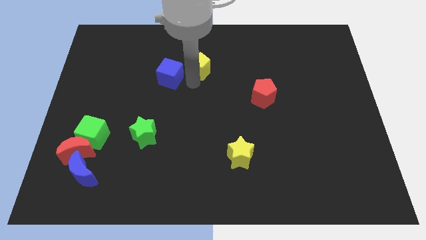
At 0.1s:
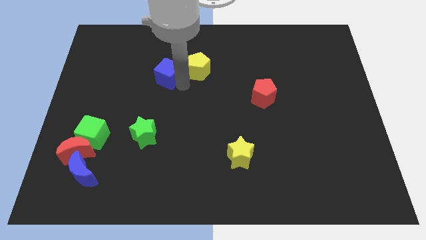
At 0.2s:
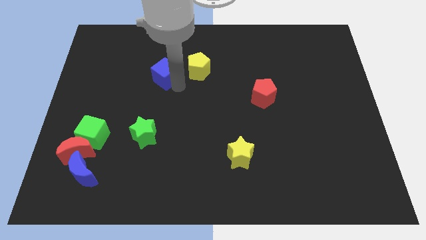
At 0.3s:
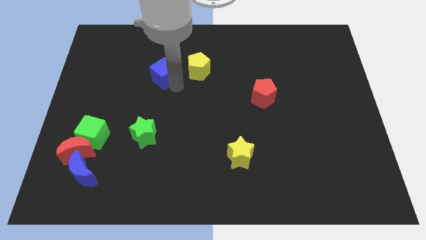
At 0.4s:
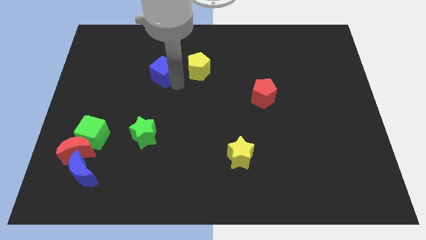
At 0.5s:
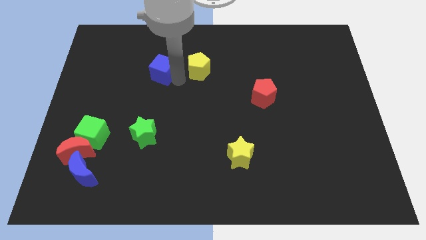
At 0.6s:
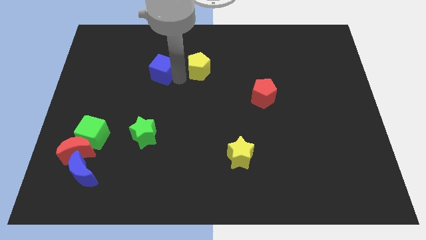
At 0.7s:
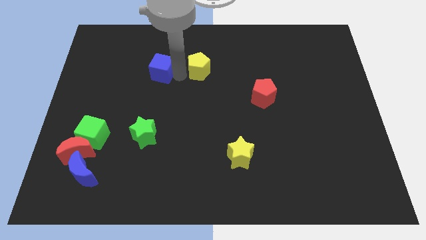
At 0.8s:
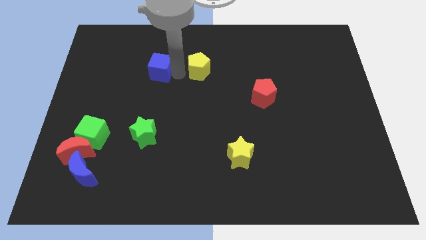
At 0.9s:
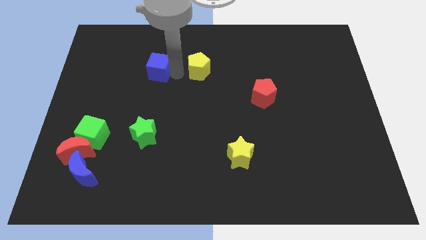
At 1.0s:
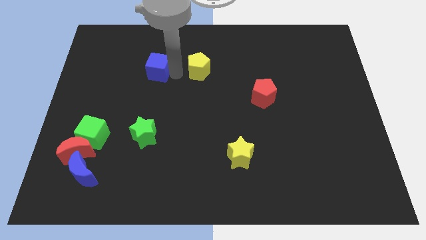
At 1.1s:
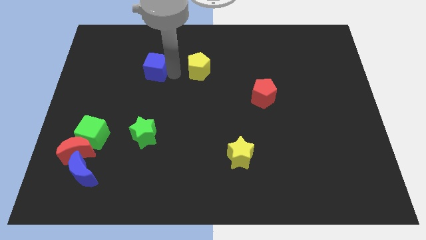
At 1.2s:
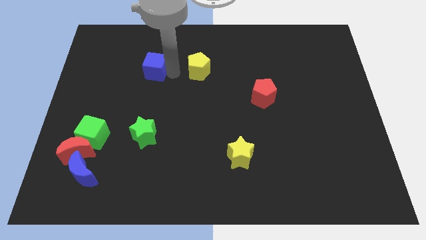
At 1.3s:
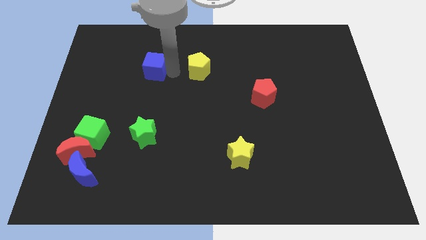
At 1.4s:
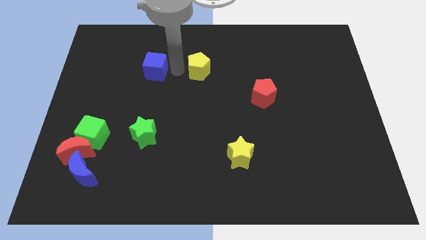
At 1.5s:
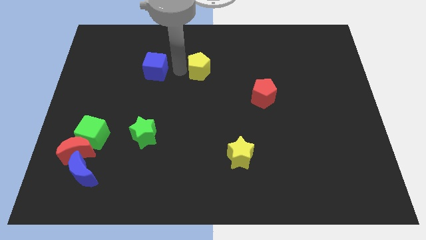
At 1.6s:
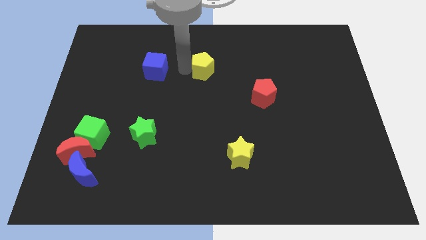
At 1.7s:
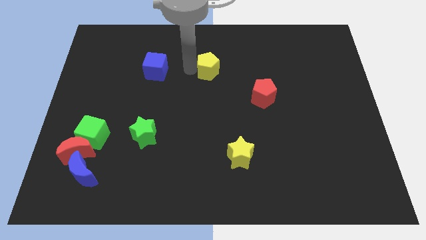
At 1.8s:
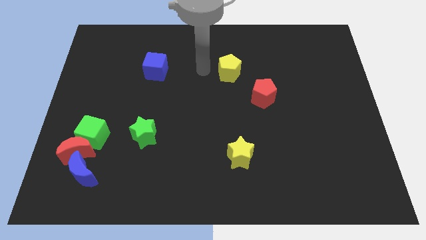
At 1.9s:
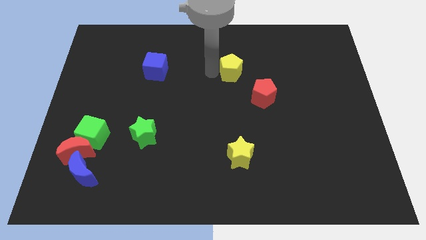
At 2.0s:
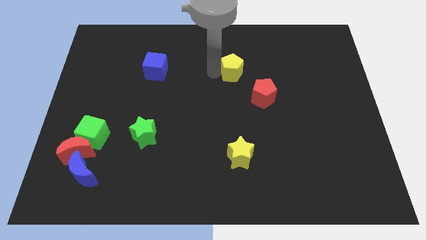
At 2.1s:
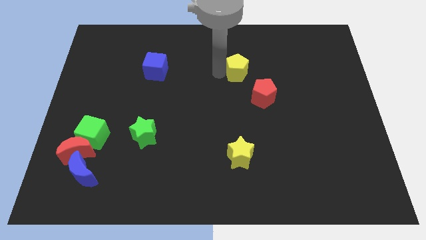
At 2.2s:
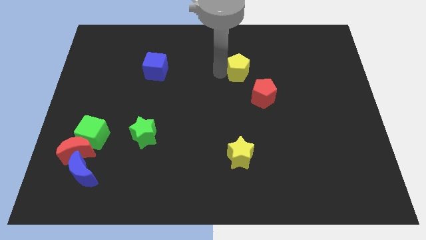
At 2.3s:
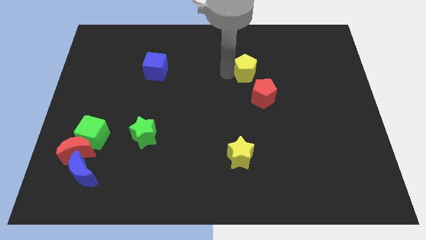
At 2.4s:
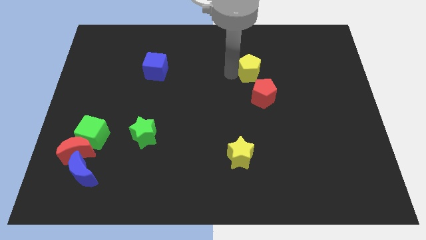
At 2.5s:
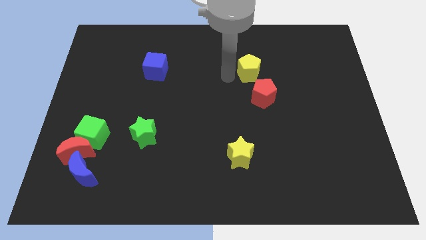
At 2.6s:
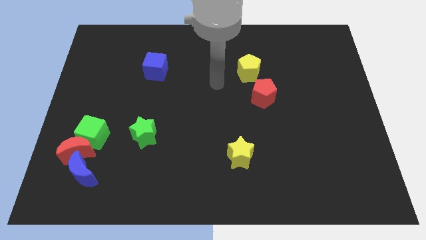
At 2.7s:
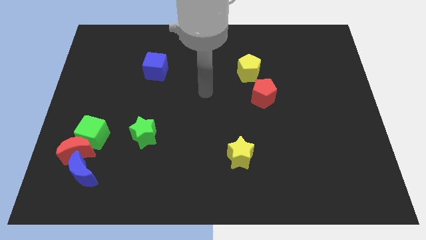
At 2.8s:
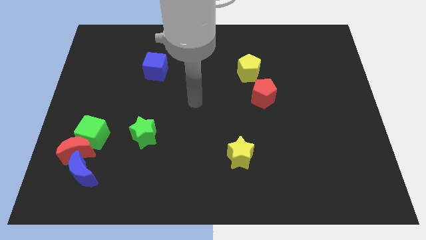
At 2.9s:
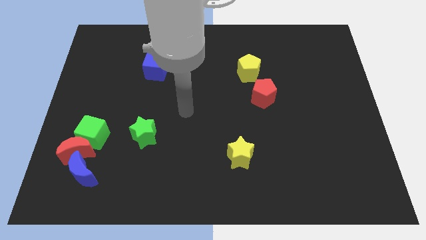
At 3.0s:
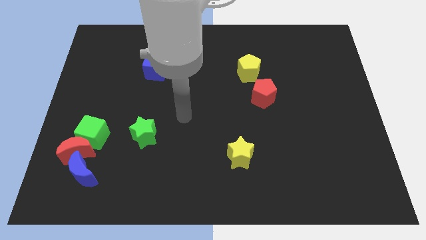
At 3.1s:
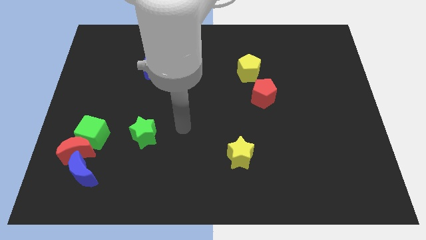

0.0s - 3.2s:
separate the blue cube and the yellow pentagon

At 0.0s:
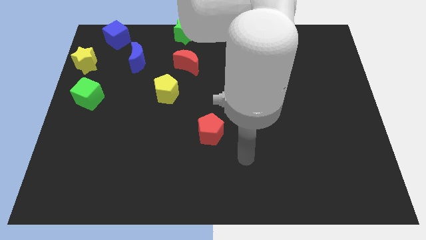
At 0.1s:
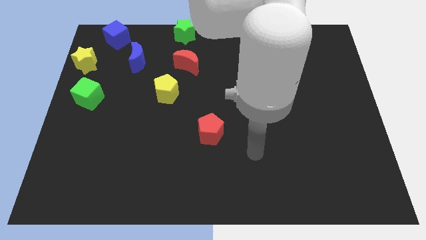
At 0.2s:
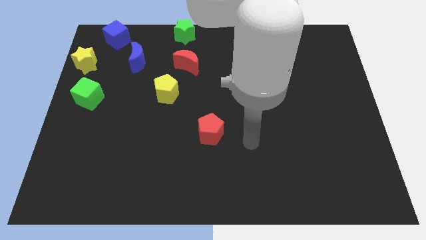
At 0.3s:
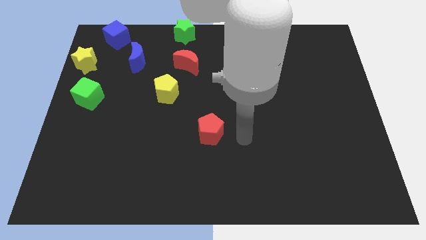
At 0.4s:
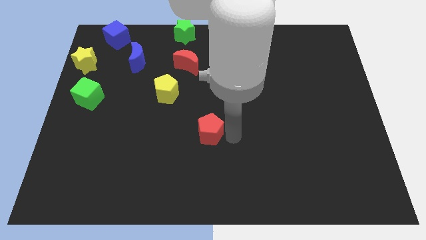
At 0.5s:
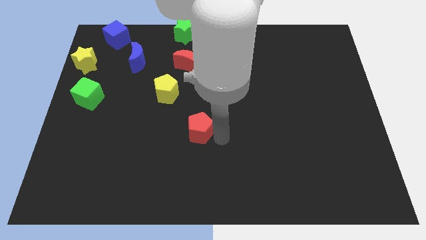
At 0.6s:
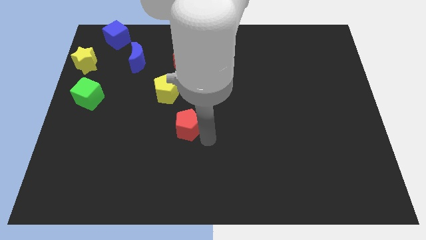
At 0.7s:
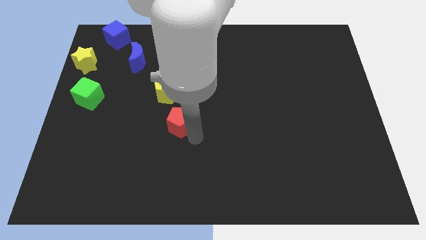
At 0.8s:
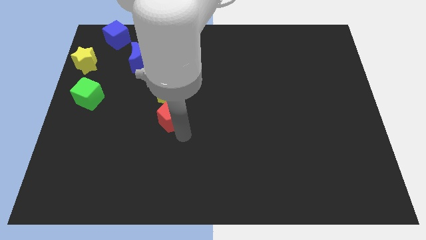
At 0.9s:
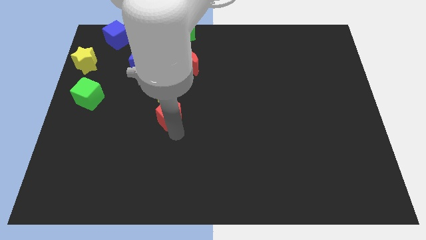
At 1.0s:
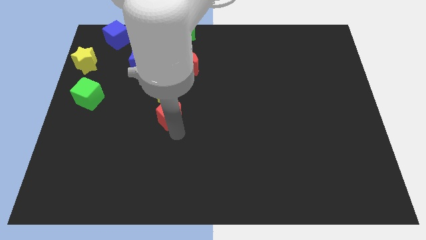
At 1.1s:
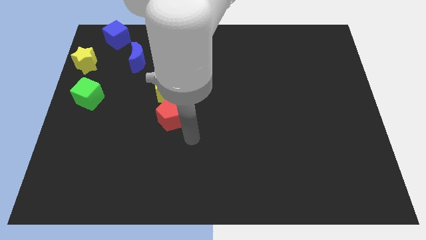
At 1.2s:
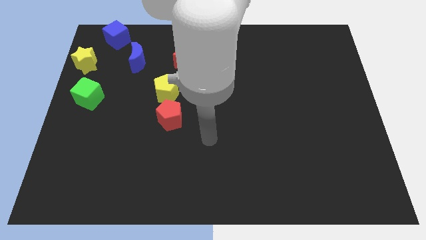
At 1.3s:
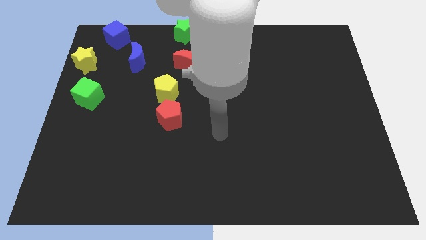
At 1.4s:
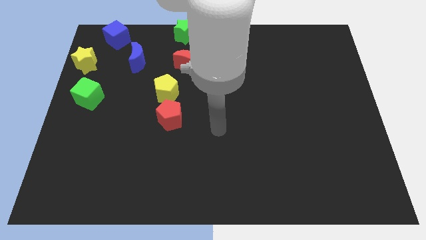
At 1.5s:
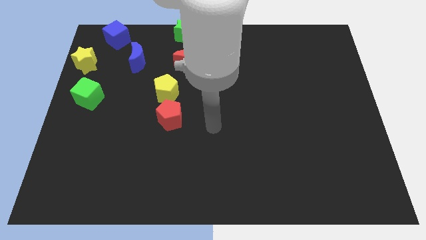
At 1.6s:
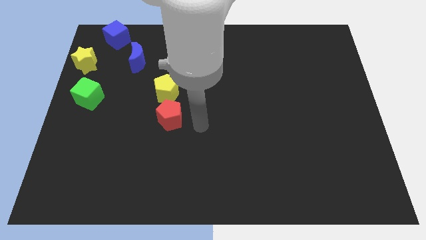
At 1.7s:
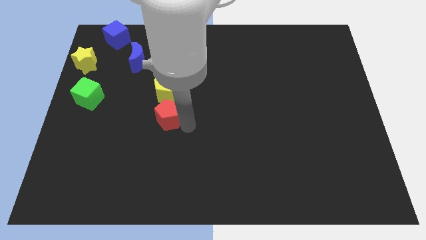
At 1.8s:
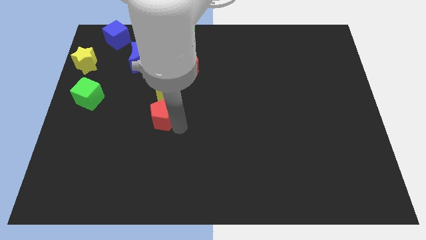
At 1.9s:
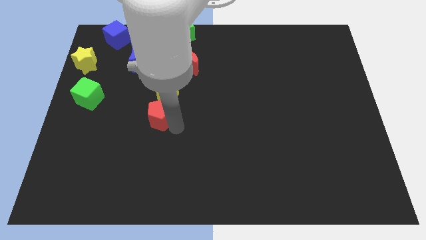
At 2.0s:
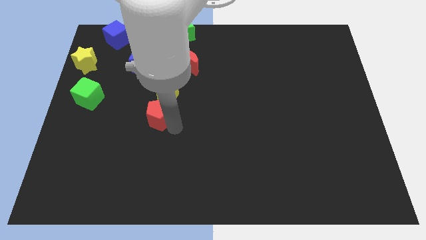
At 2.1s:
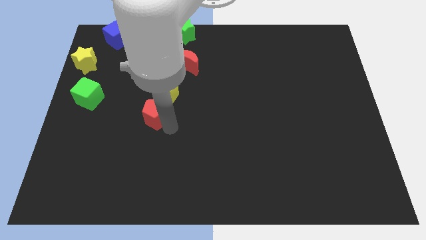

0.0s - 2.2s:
push red pentagon towards yellow pentagon

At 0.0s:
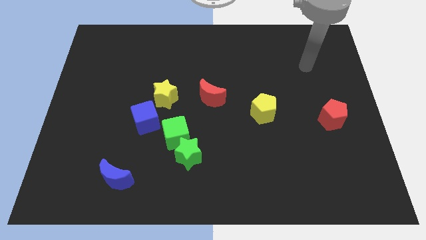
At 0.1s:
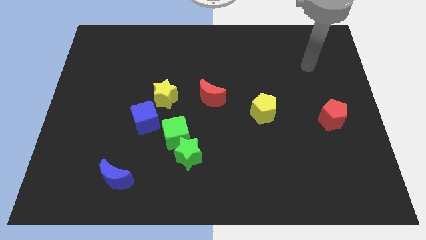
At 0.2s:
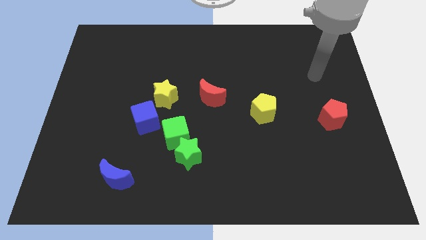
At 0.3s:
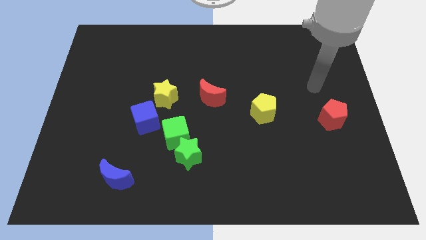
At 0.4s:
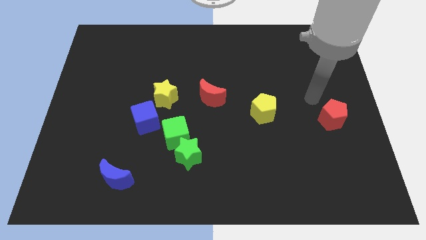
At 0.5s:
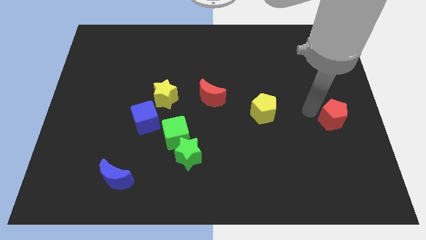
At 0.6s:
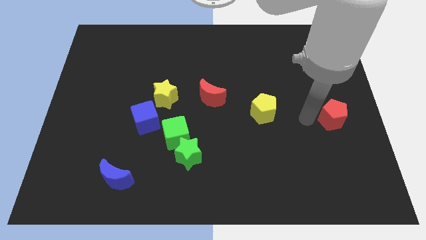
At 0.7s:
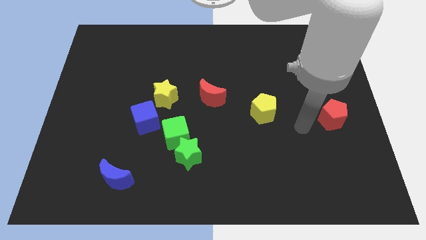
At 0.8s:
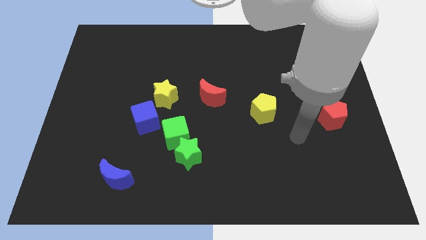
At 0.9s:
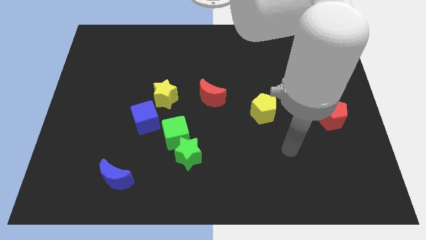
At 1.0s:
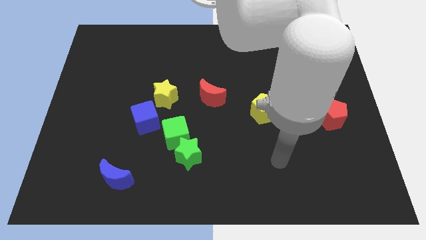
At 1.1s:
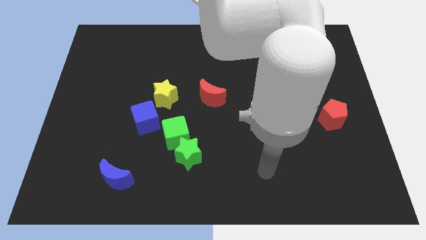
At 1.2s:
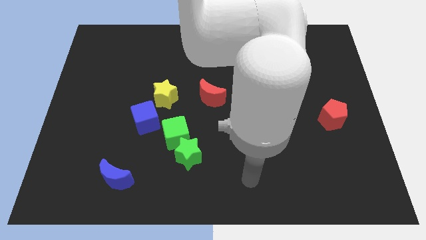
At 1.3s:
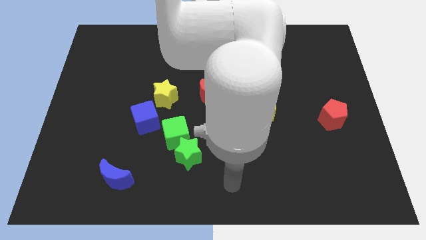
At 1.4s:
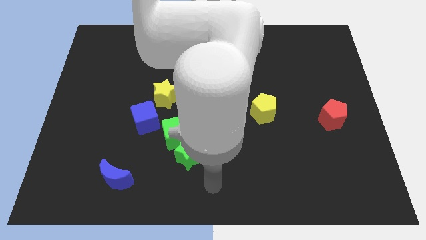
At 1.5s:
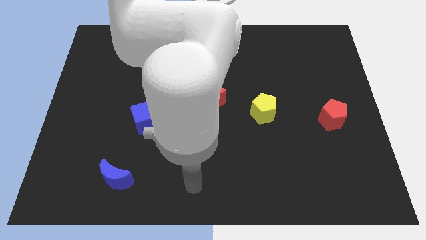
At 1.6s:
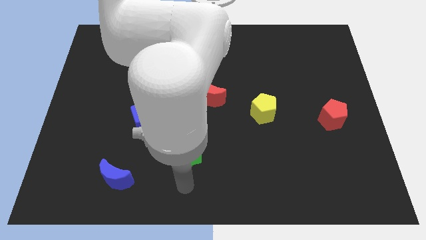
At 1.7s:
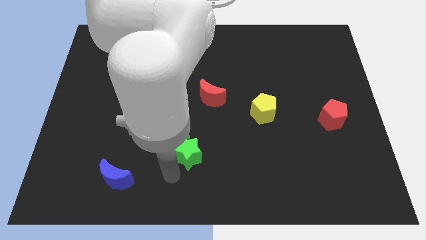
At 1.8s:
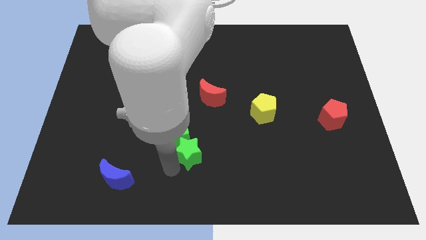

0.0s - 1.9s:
move your hand close to the green star

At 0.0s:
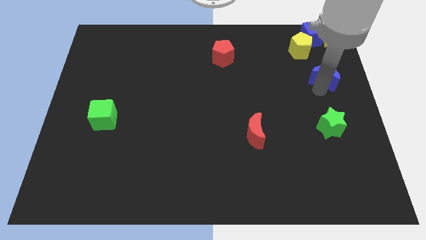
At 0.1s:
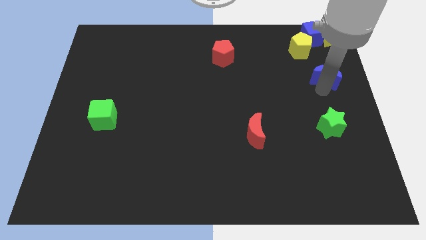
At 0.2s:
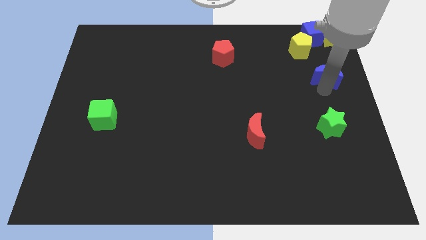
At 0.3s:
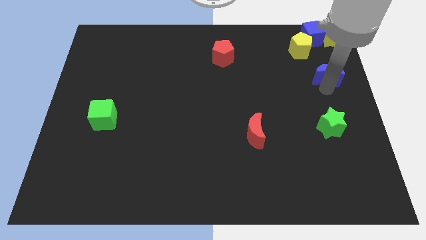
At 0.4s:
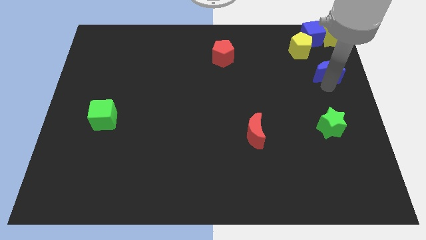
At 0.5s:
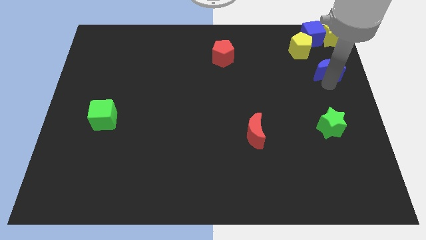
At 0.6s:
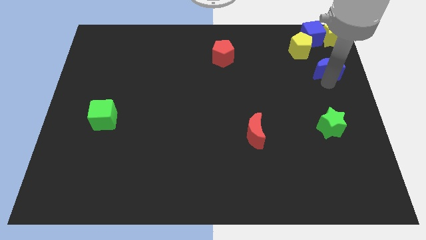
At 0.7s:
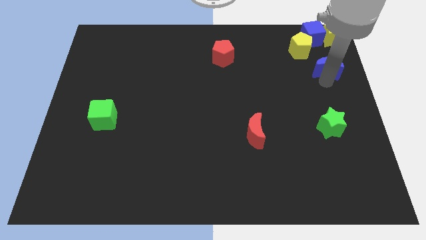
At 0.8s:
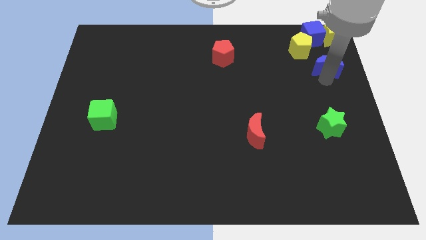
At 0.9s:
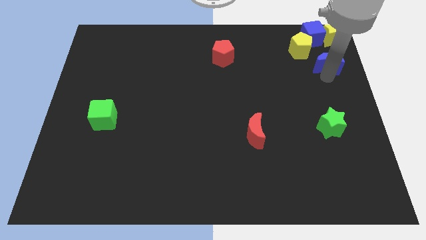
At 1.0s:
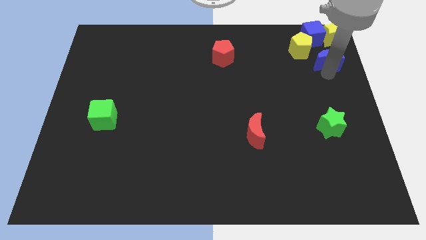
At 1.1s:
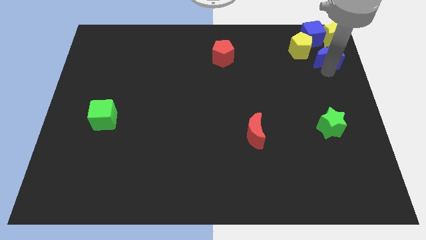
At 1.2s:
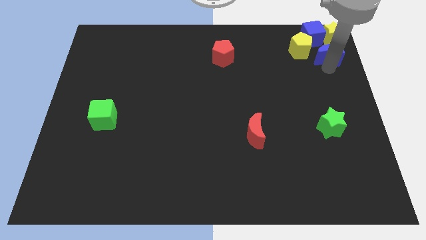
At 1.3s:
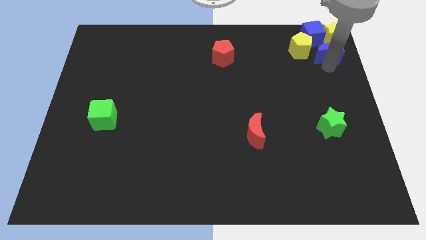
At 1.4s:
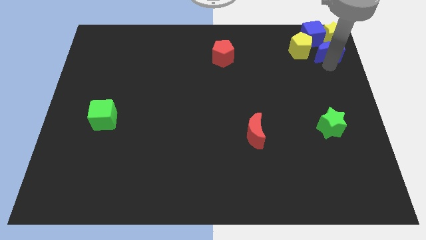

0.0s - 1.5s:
place the blue crescent below the yellow star
